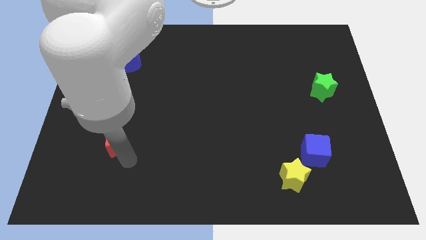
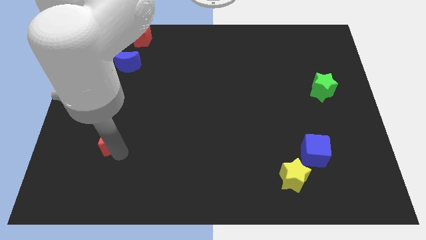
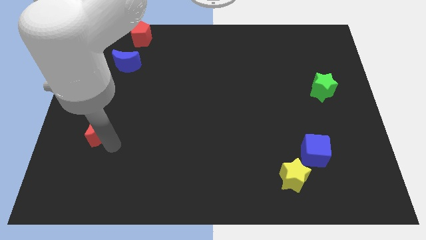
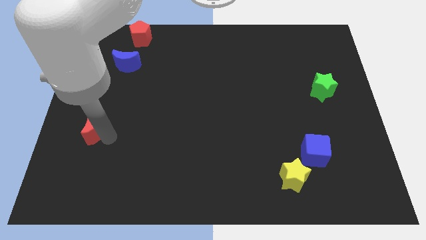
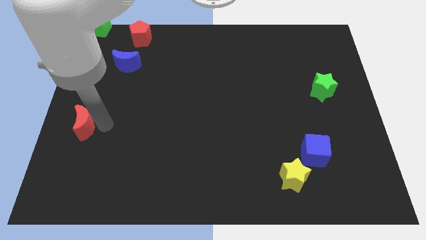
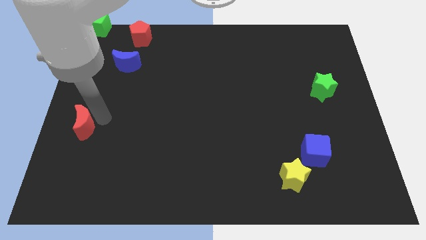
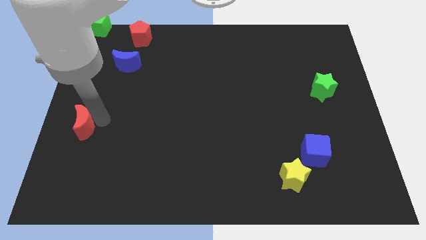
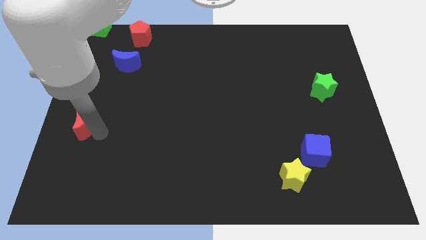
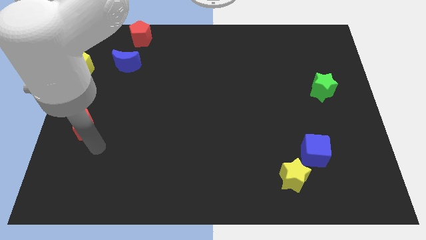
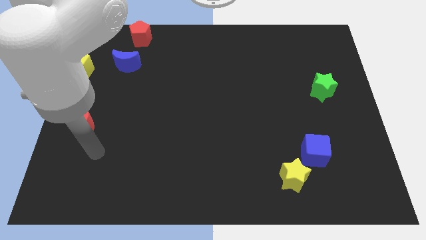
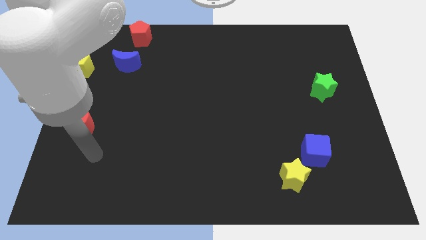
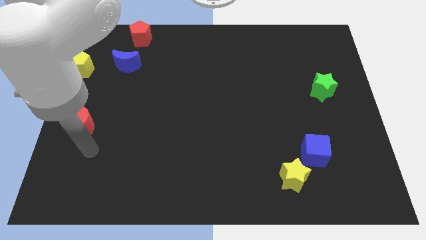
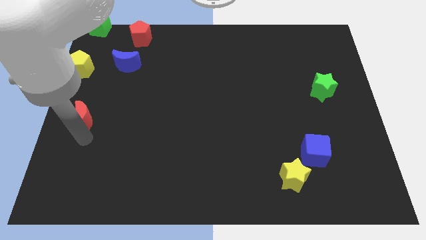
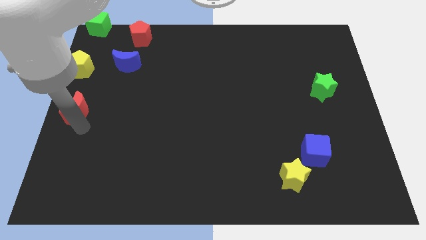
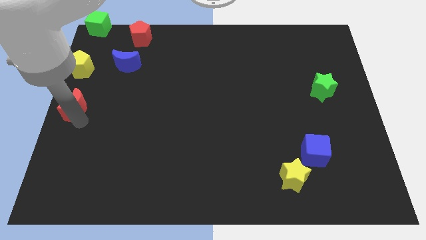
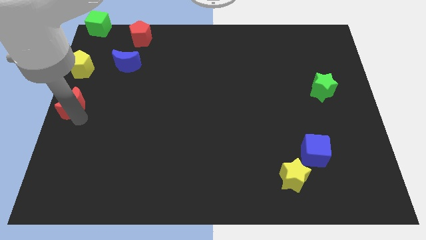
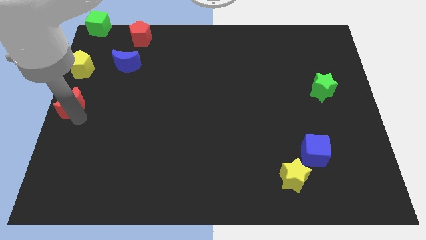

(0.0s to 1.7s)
place the red moon below the yellow pentagon

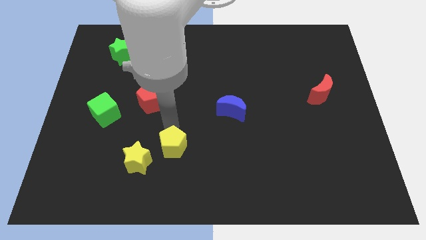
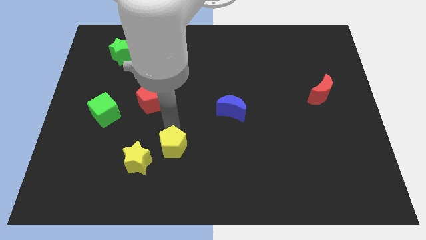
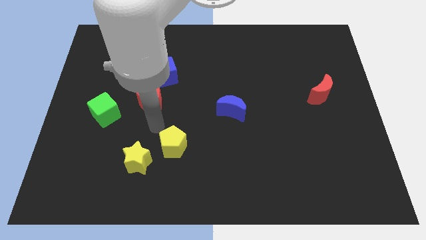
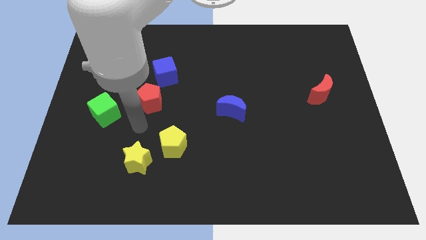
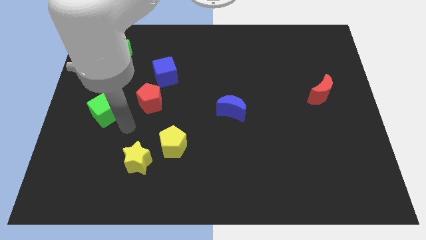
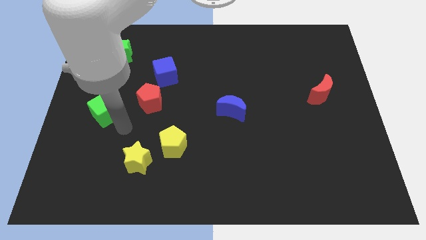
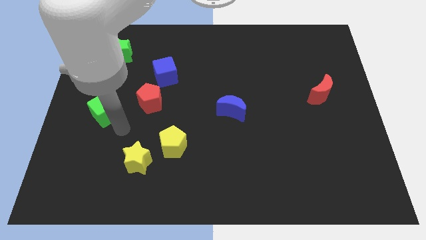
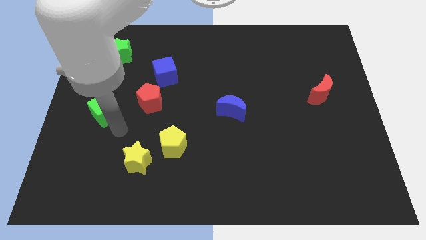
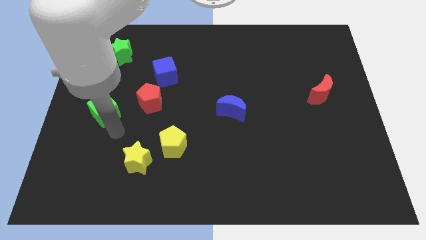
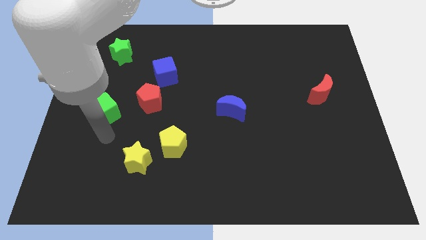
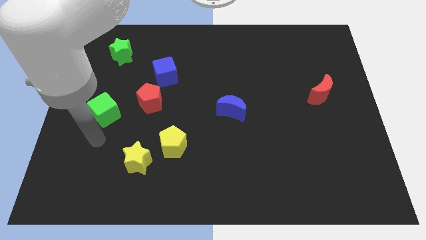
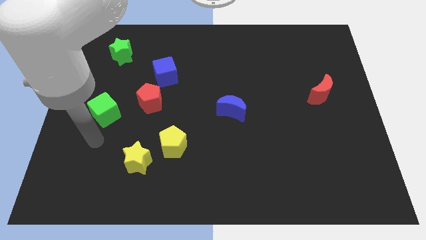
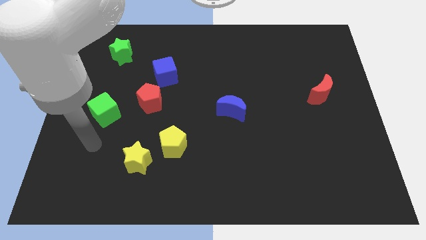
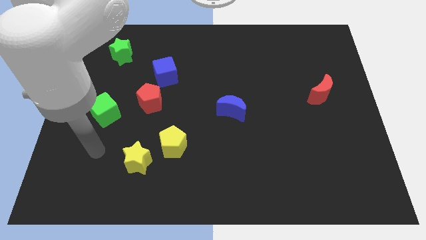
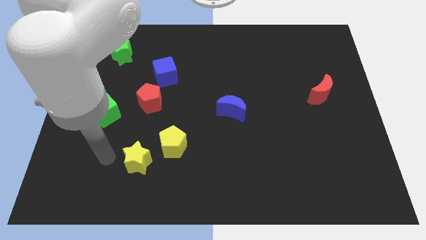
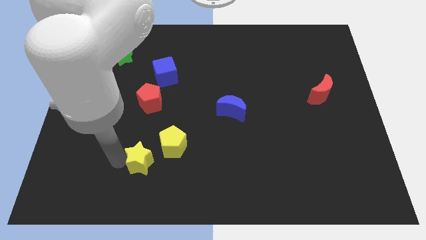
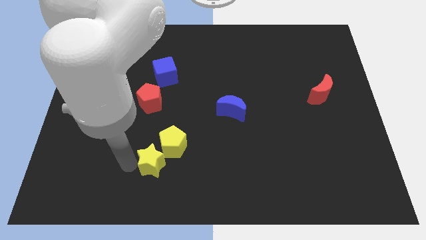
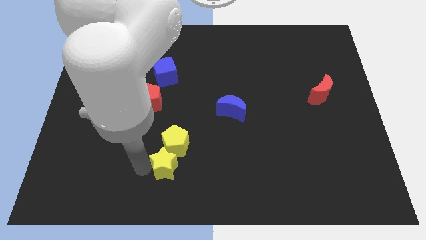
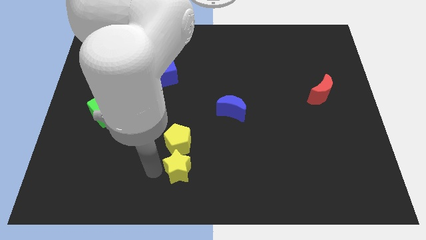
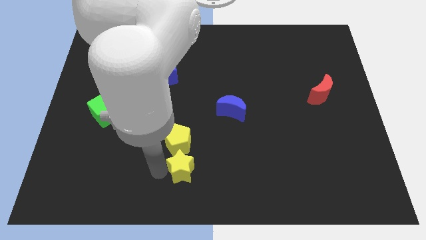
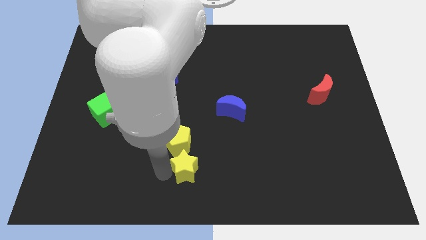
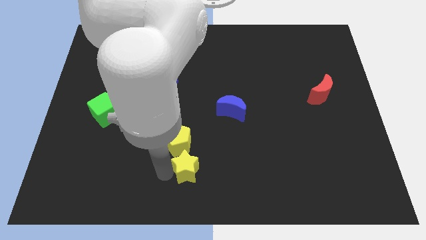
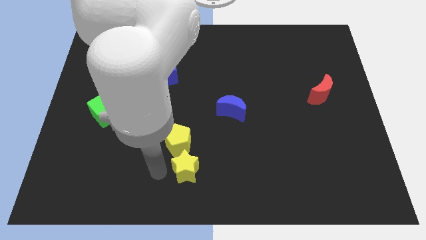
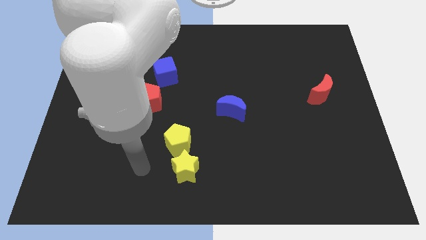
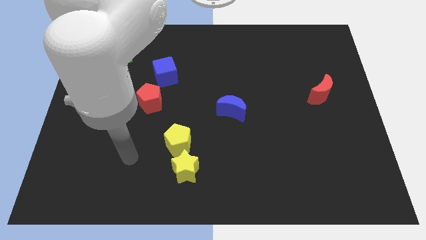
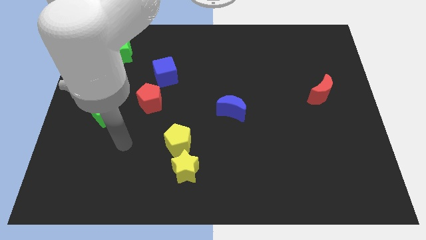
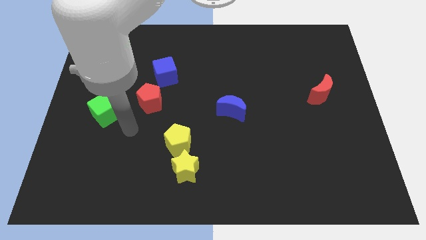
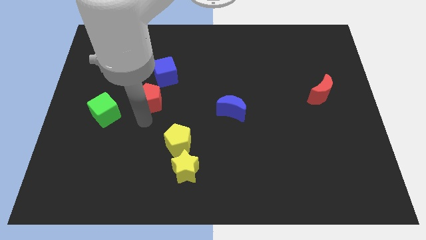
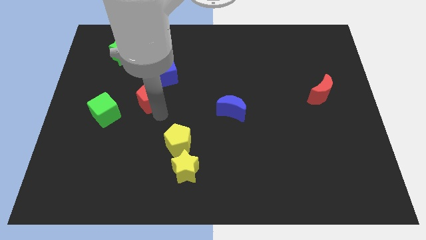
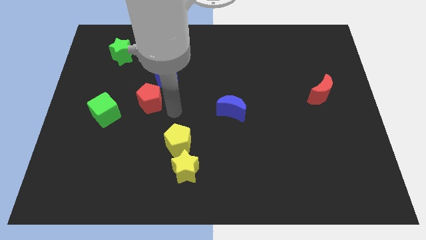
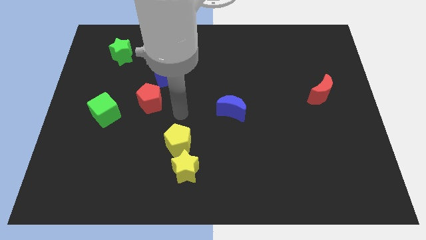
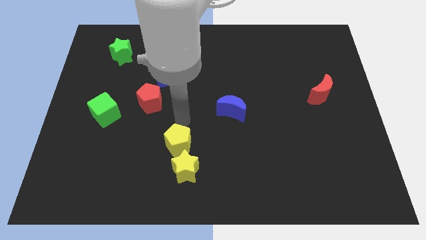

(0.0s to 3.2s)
slide the yellow star slightly to the right

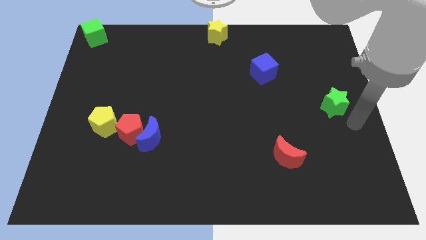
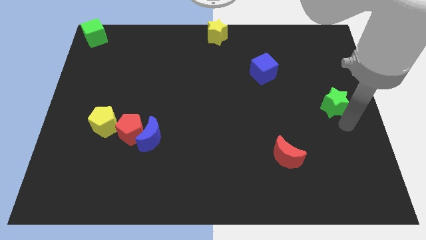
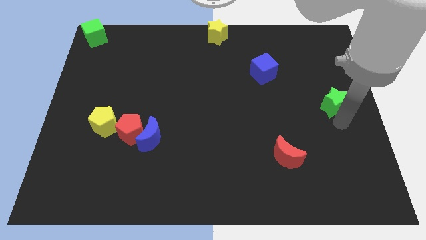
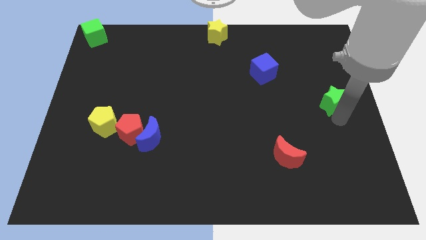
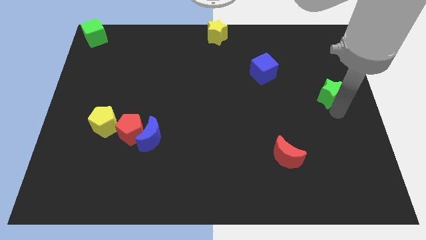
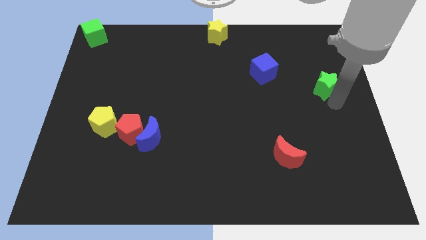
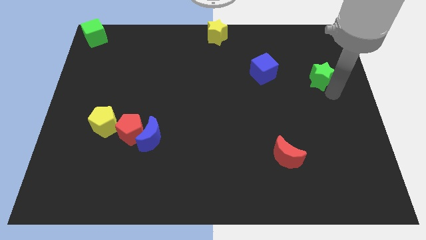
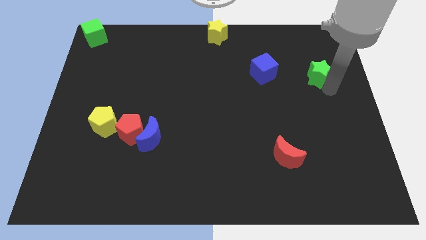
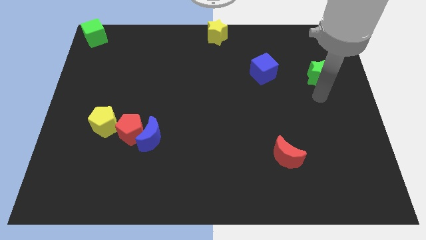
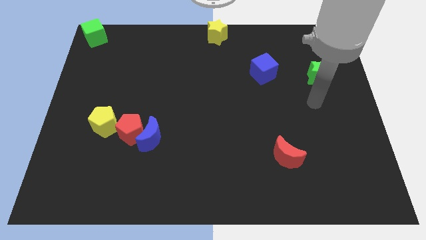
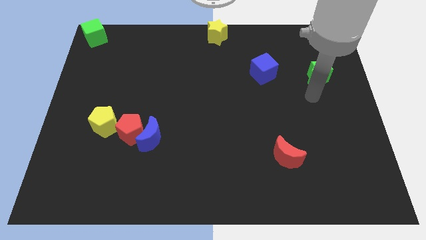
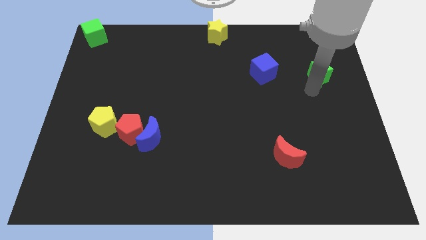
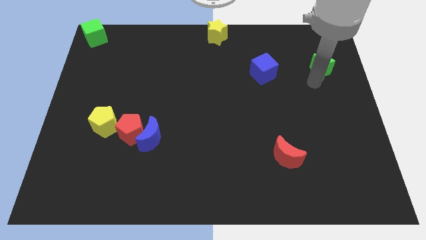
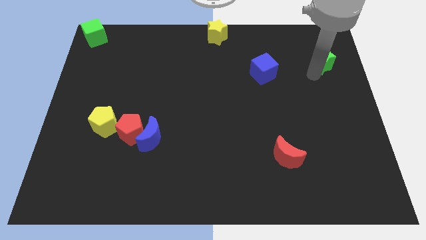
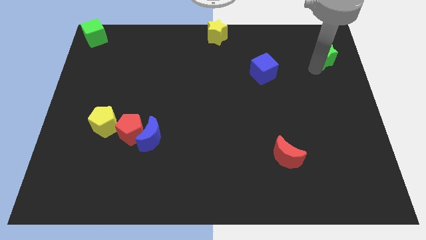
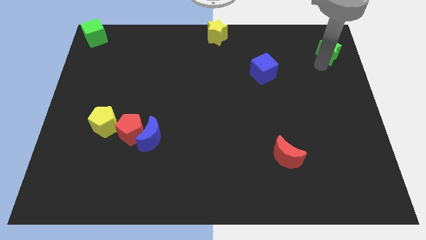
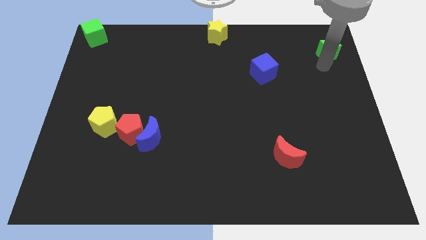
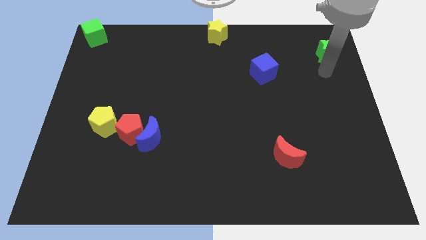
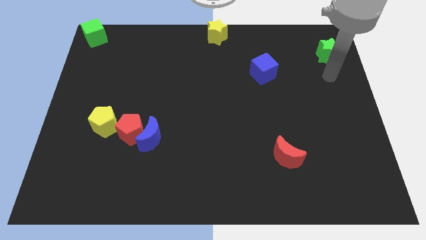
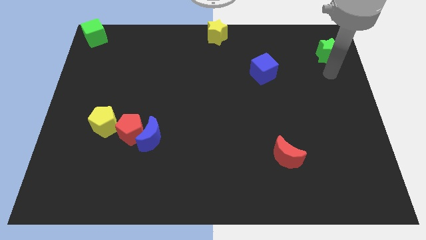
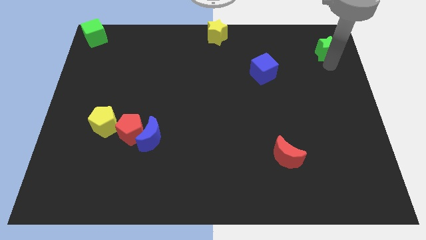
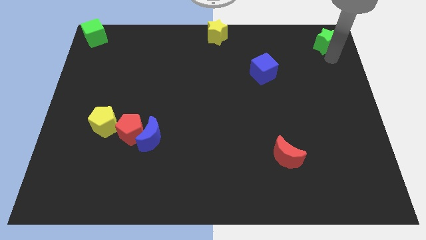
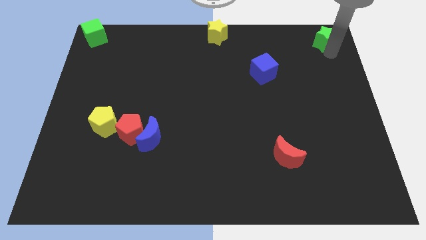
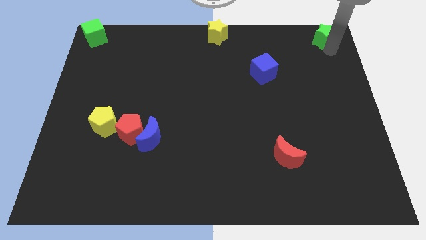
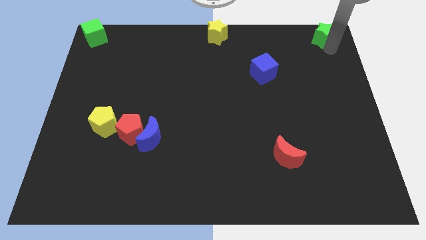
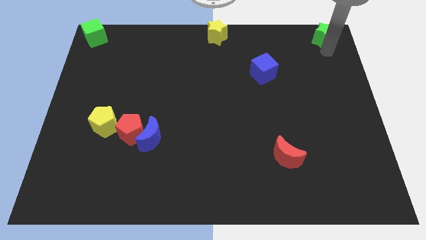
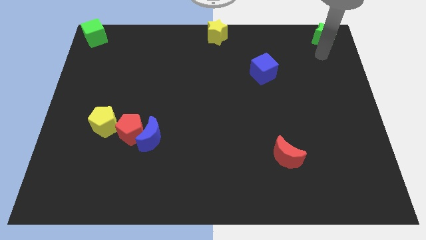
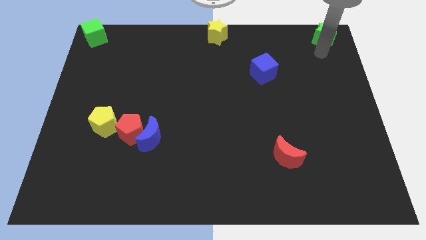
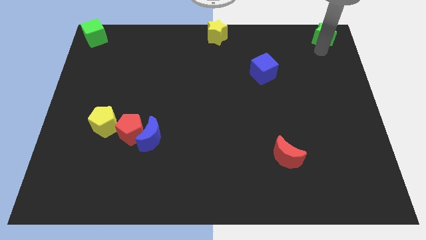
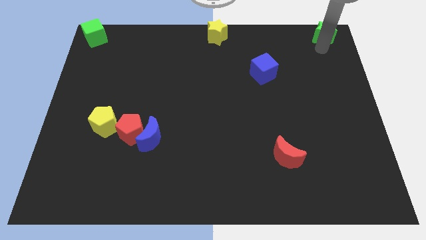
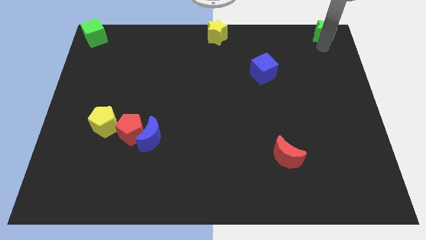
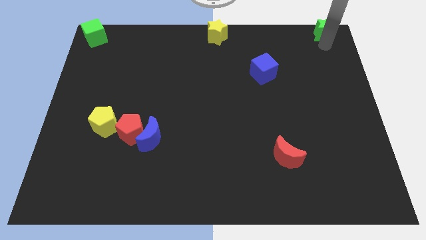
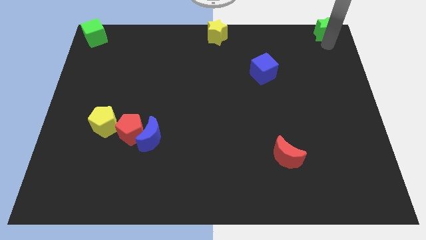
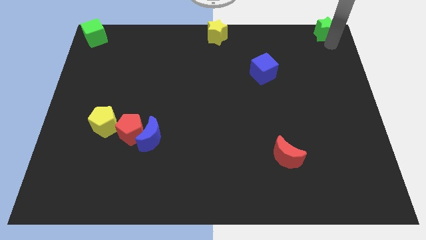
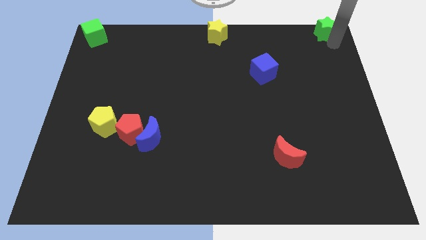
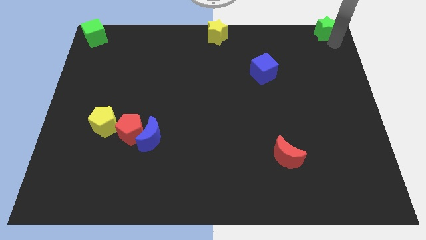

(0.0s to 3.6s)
move the green star to the top right corner of the board

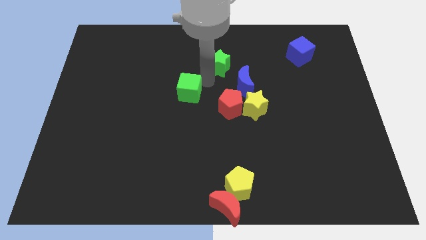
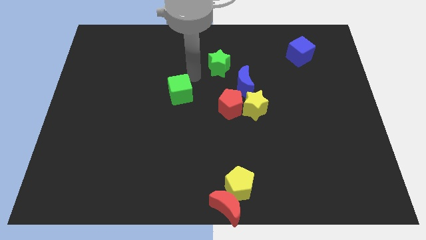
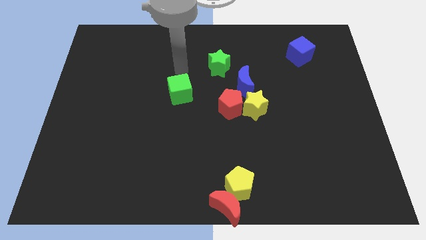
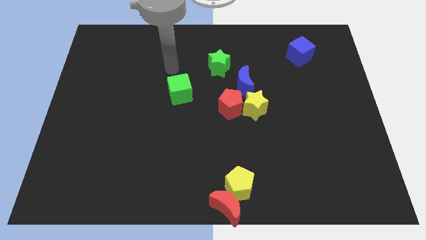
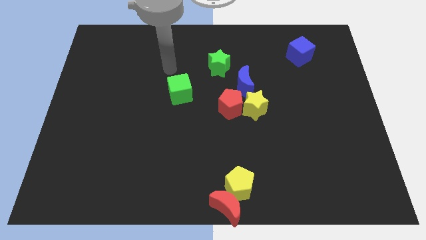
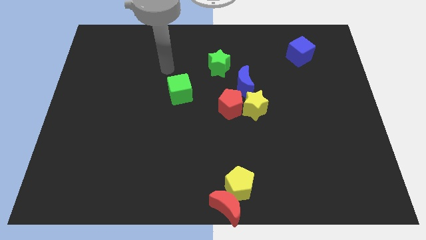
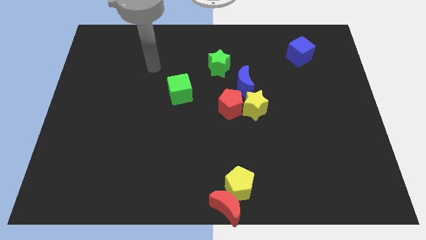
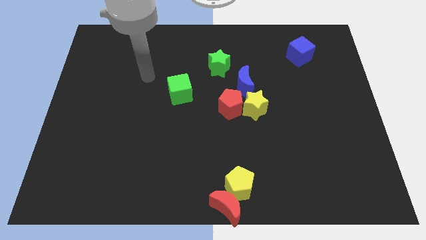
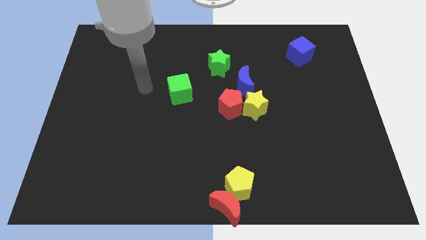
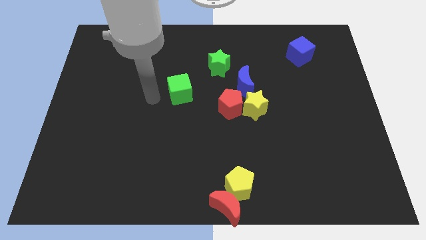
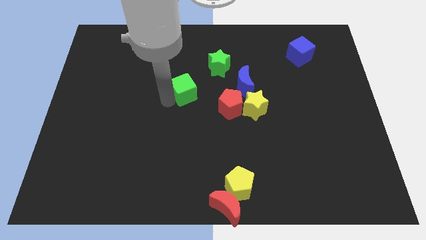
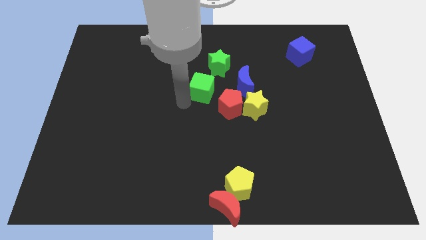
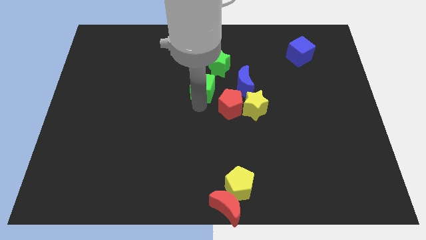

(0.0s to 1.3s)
put the green cube at the center of the board
